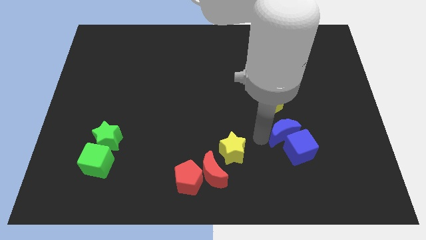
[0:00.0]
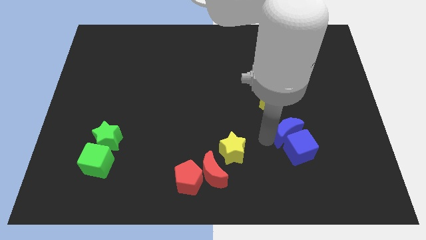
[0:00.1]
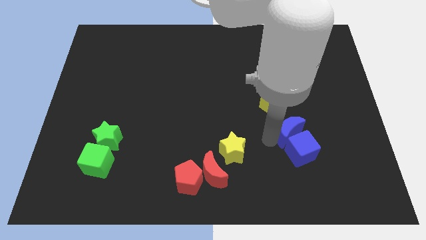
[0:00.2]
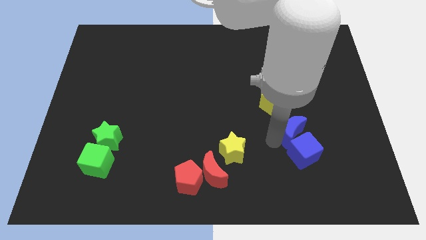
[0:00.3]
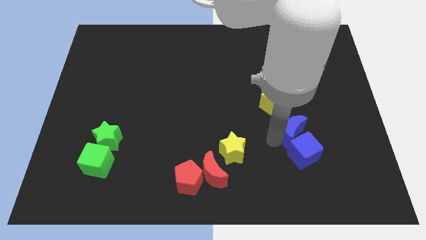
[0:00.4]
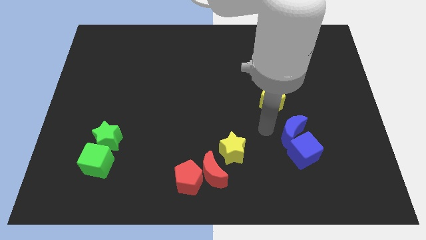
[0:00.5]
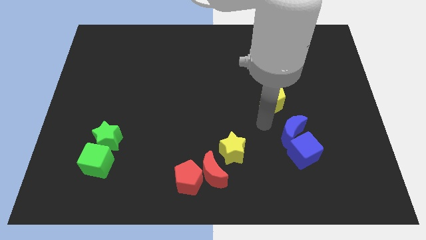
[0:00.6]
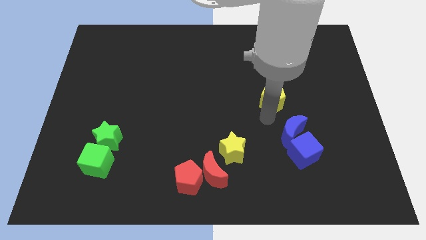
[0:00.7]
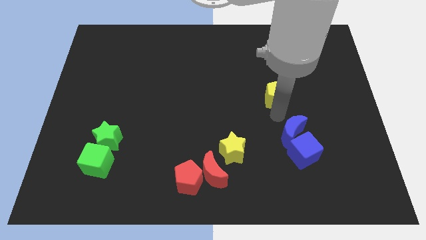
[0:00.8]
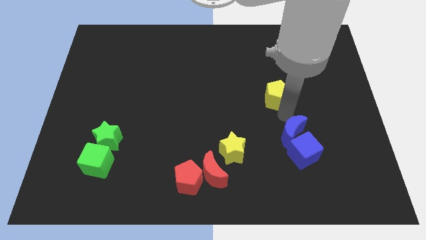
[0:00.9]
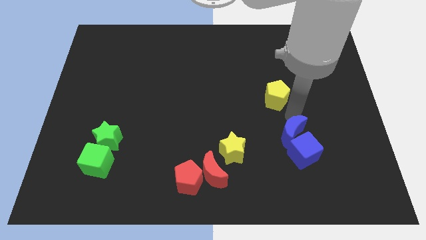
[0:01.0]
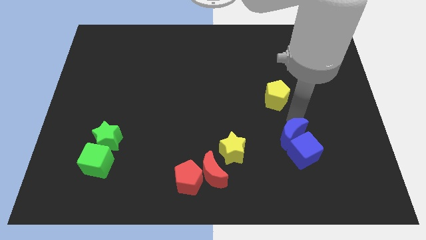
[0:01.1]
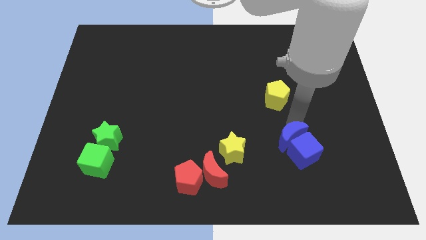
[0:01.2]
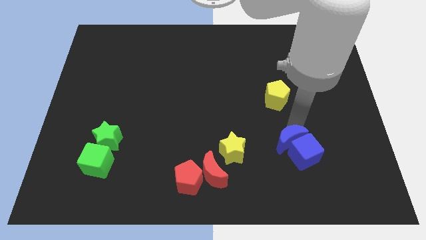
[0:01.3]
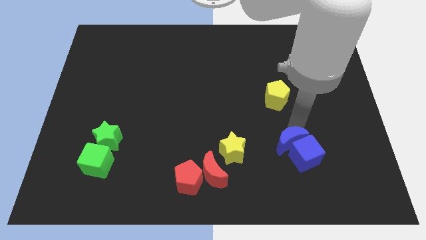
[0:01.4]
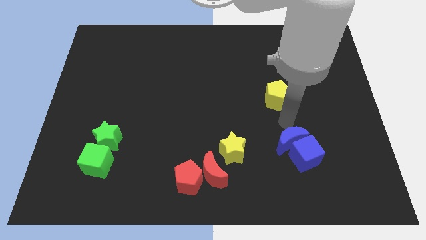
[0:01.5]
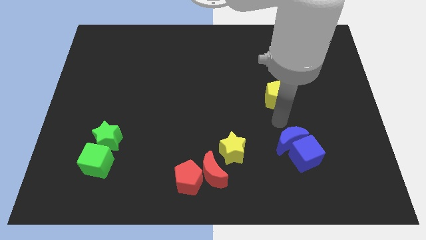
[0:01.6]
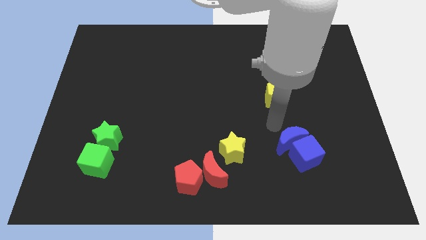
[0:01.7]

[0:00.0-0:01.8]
push the blue moon into blue cube

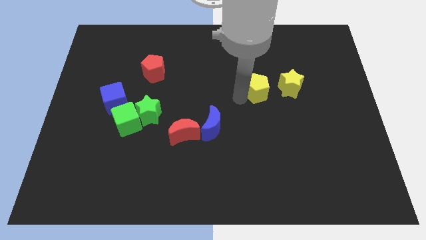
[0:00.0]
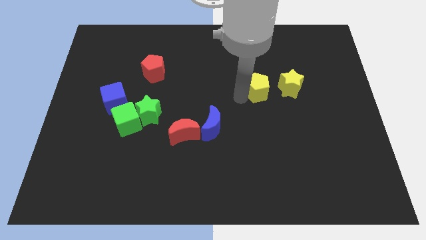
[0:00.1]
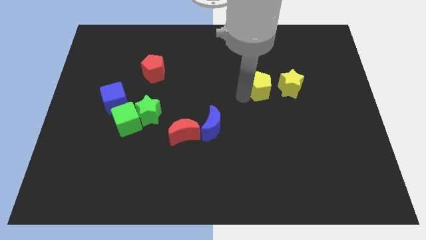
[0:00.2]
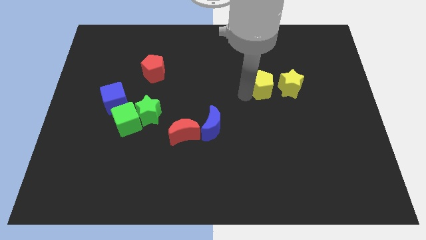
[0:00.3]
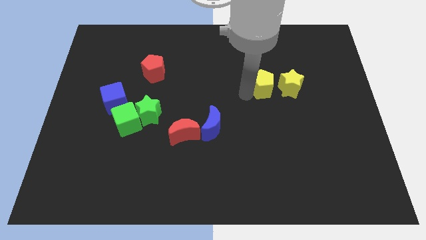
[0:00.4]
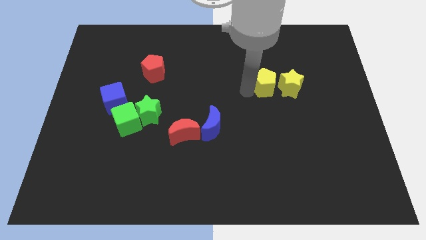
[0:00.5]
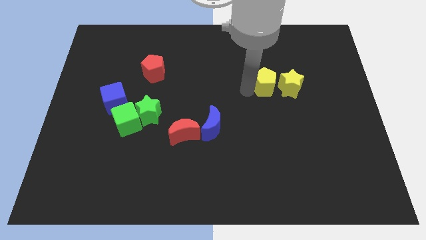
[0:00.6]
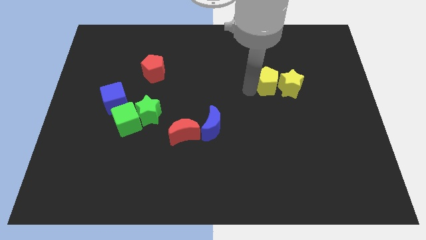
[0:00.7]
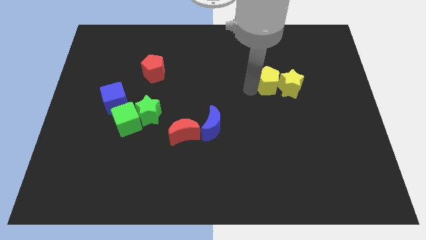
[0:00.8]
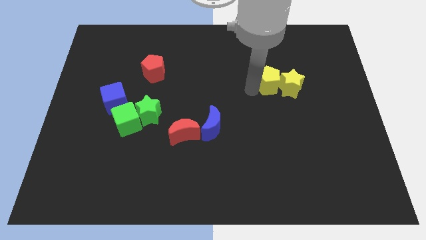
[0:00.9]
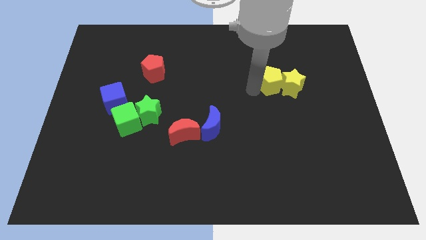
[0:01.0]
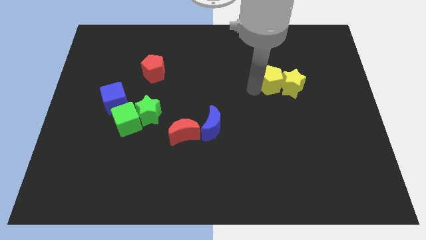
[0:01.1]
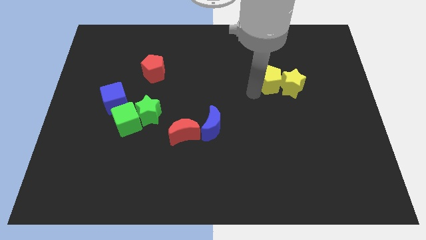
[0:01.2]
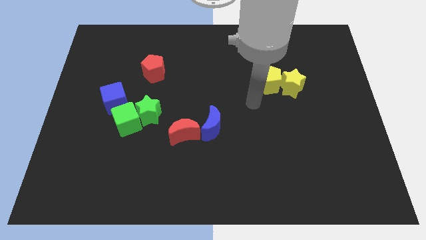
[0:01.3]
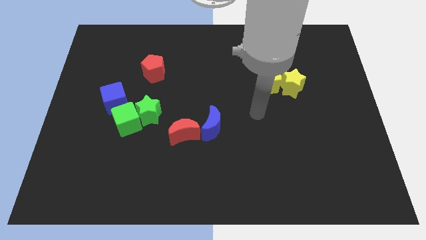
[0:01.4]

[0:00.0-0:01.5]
place yellow pentagon to the left side of the yellow star

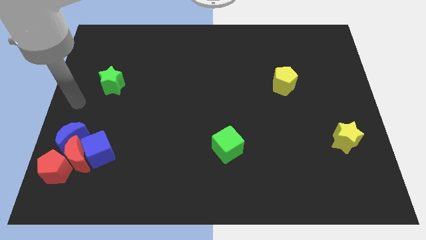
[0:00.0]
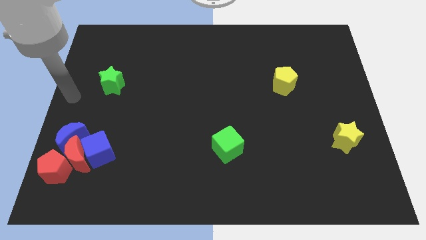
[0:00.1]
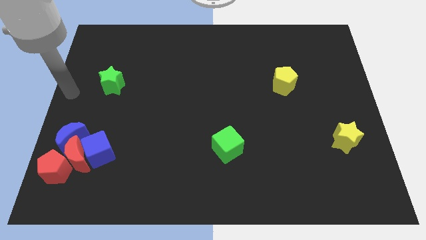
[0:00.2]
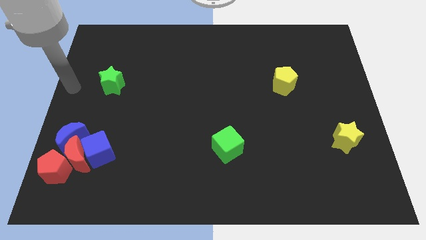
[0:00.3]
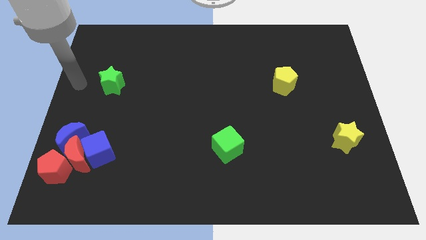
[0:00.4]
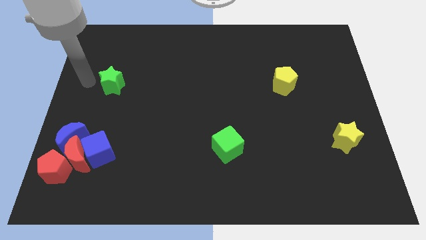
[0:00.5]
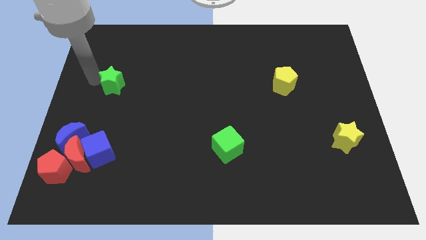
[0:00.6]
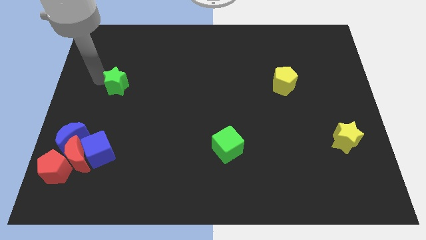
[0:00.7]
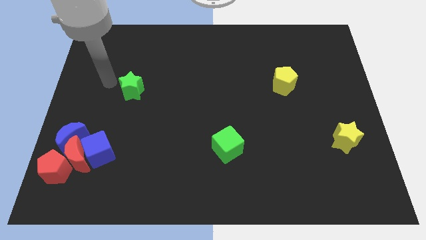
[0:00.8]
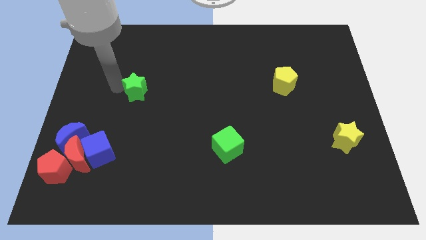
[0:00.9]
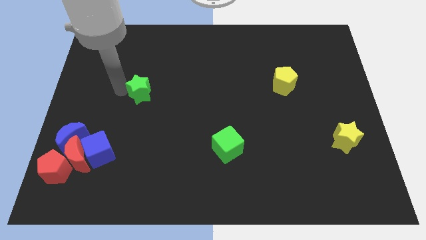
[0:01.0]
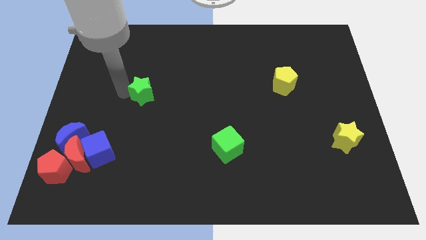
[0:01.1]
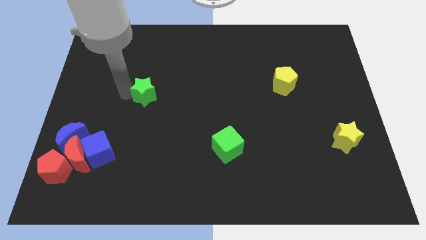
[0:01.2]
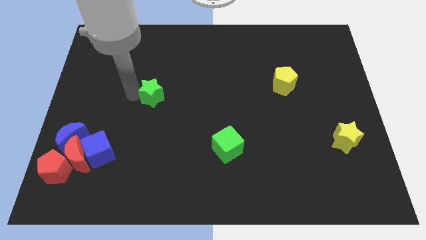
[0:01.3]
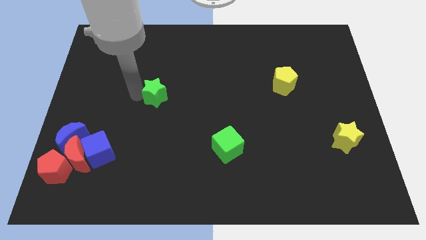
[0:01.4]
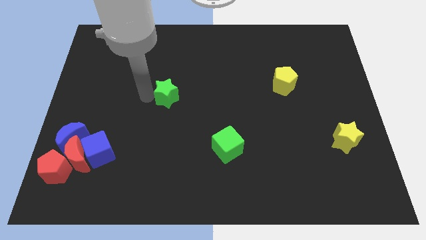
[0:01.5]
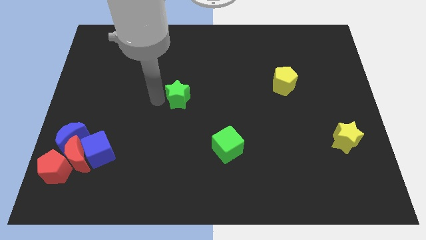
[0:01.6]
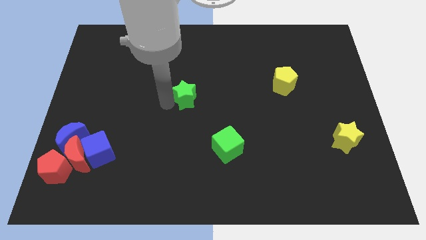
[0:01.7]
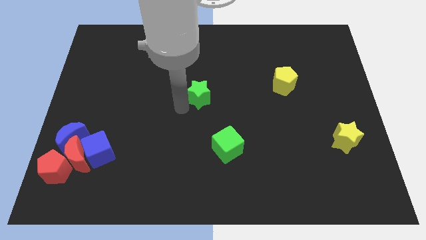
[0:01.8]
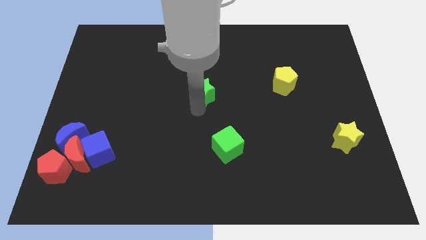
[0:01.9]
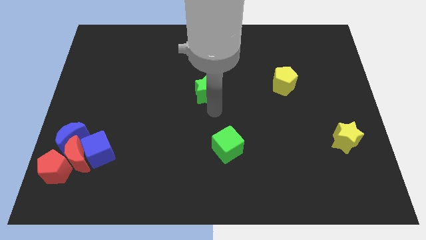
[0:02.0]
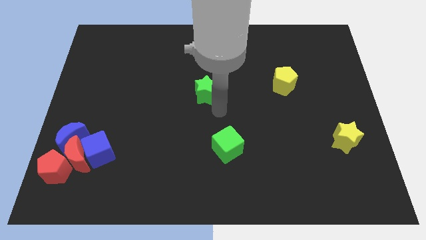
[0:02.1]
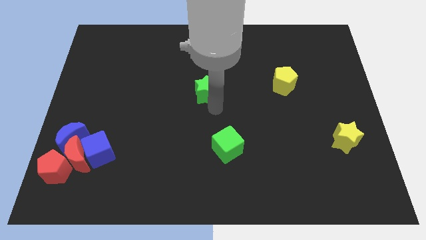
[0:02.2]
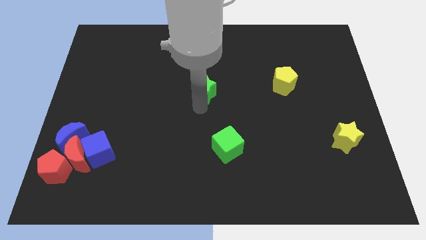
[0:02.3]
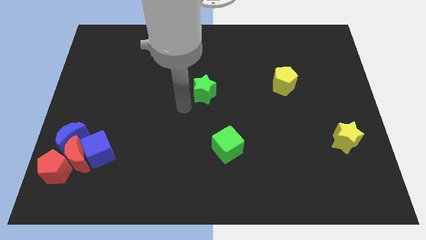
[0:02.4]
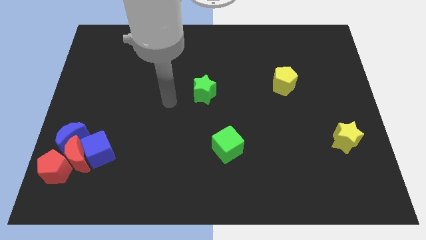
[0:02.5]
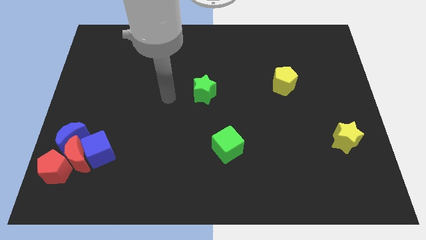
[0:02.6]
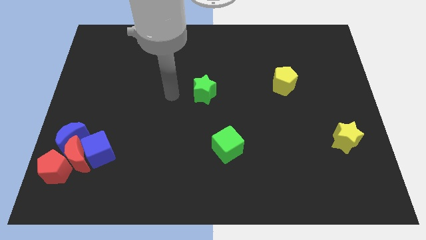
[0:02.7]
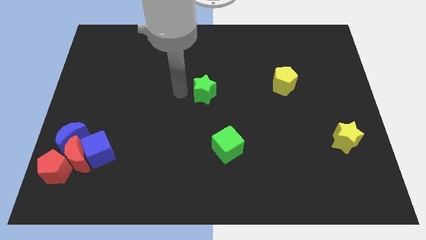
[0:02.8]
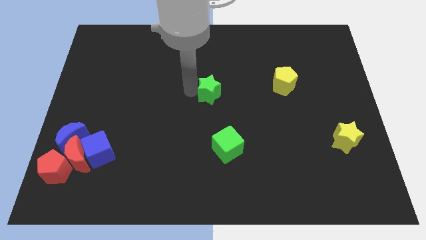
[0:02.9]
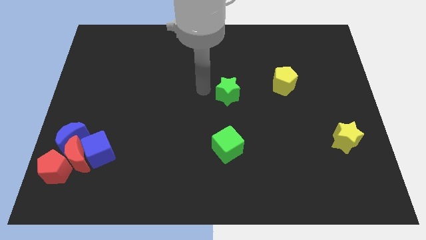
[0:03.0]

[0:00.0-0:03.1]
place the green star above the green cube

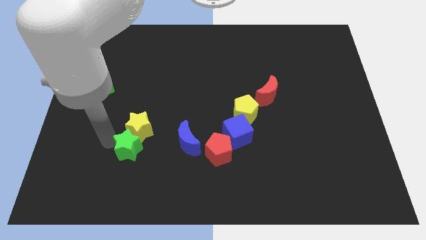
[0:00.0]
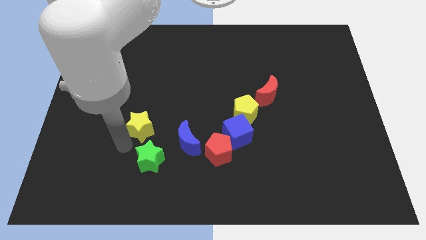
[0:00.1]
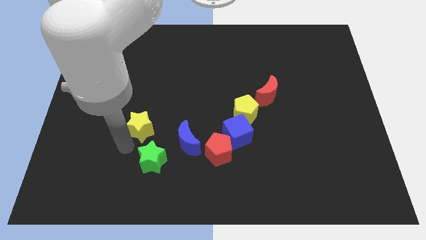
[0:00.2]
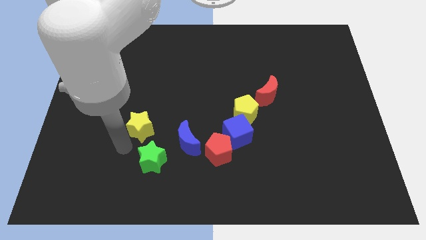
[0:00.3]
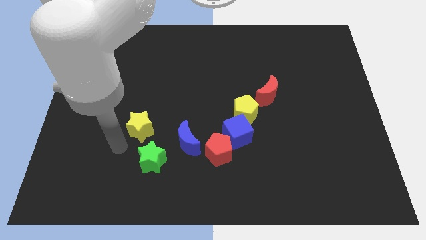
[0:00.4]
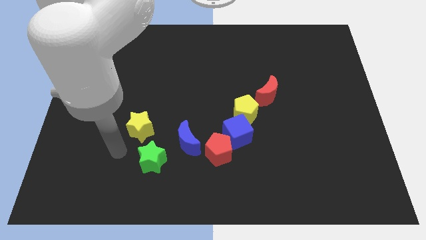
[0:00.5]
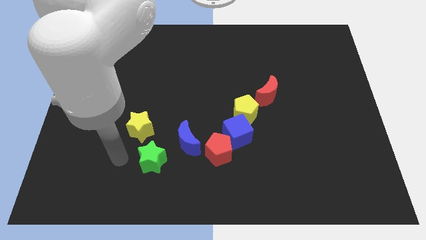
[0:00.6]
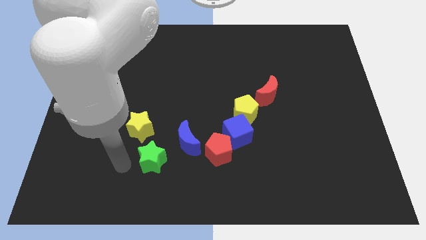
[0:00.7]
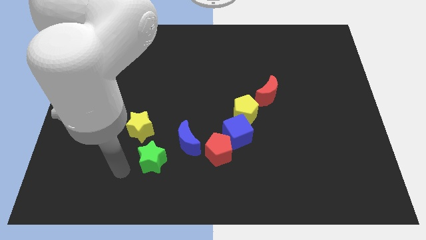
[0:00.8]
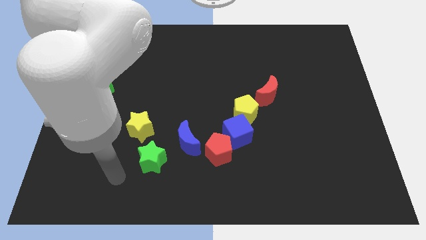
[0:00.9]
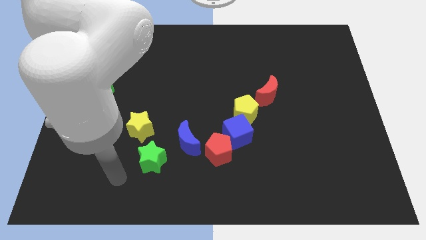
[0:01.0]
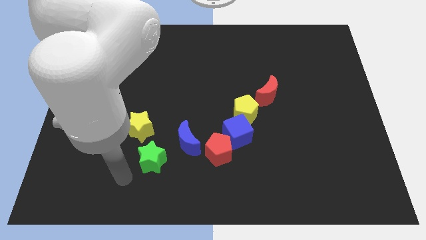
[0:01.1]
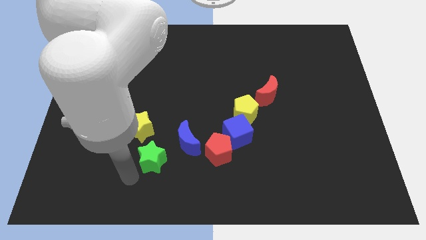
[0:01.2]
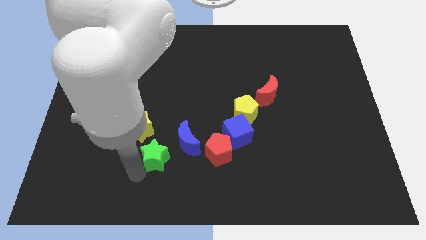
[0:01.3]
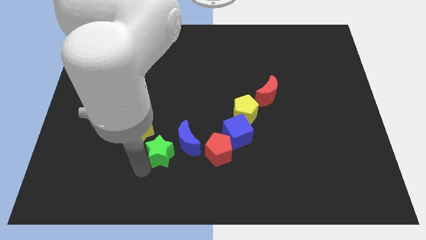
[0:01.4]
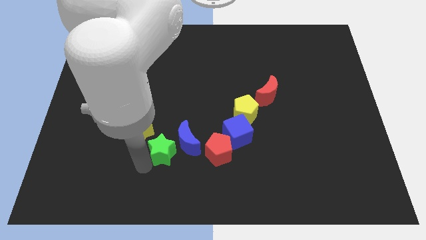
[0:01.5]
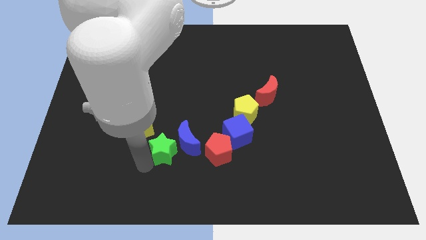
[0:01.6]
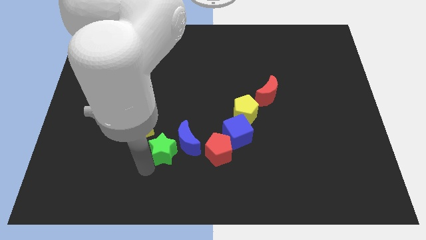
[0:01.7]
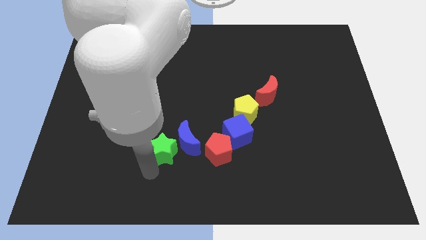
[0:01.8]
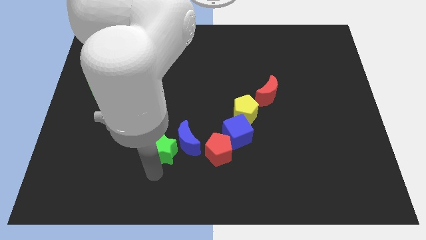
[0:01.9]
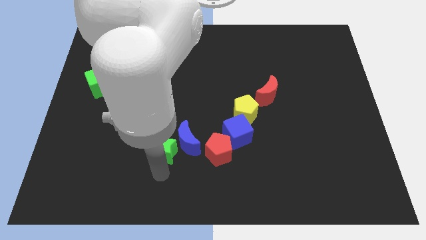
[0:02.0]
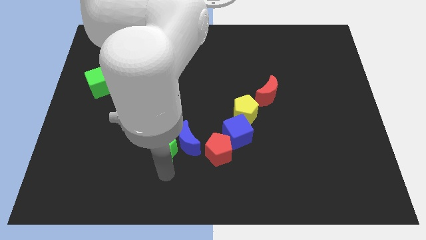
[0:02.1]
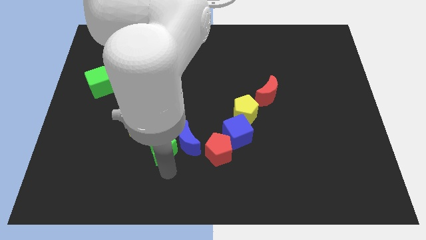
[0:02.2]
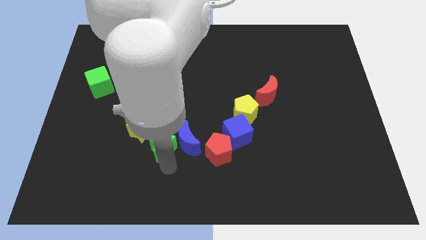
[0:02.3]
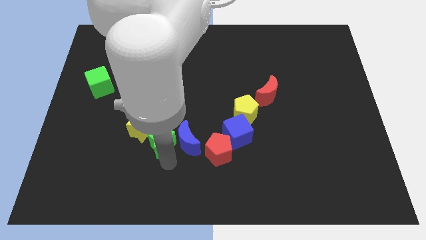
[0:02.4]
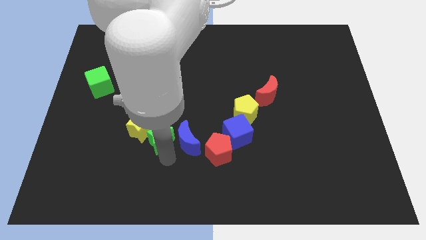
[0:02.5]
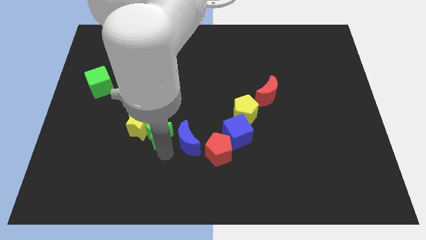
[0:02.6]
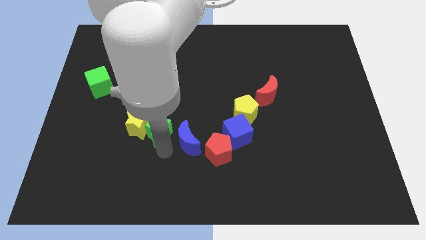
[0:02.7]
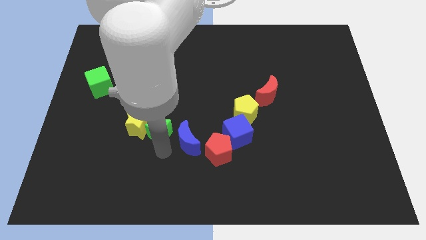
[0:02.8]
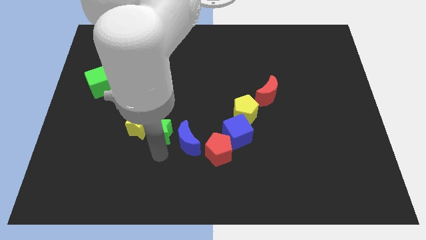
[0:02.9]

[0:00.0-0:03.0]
place the green star in between yellow star and blue moon
